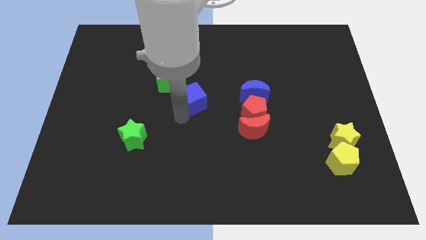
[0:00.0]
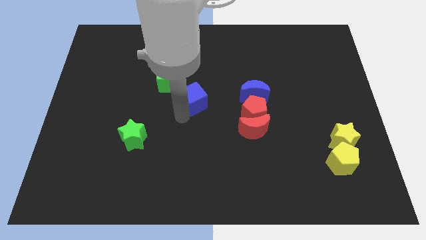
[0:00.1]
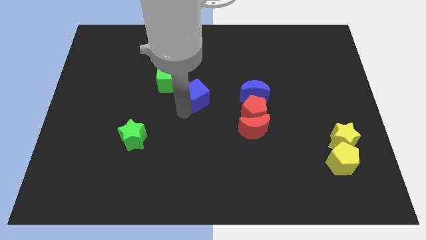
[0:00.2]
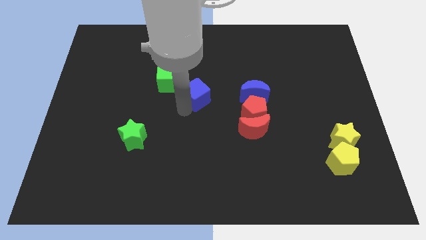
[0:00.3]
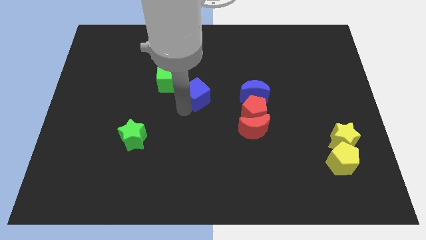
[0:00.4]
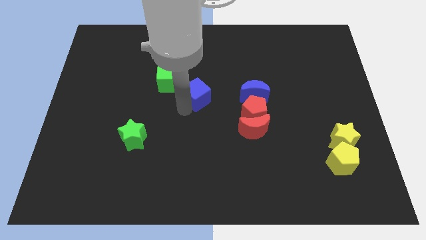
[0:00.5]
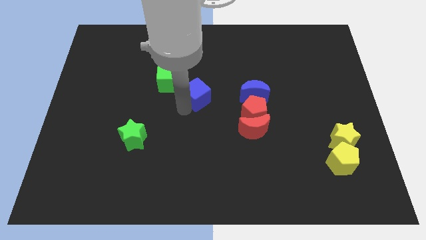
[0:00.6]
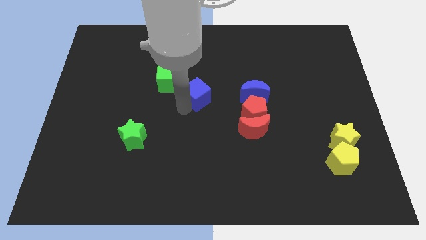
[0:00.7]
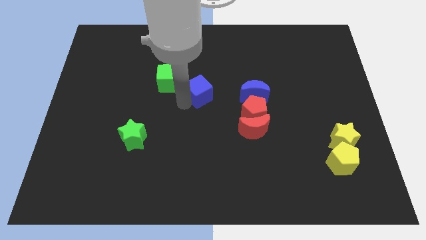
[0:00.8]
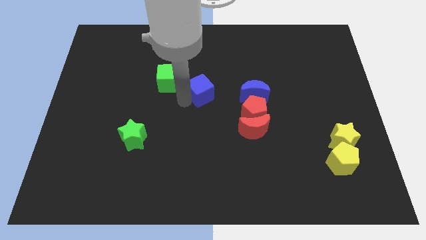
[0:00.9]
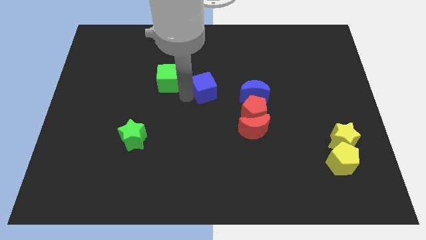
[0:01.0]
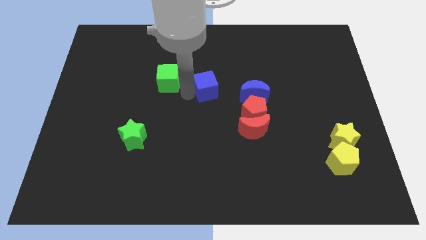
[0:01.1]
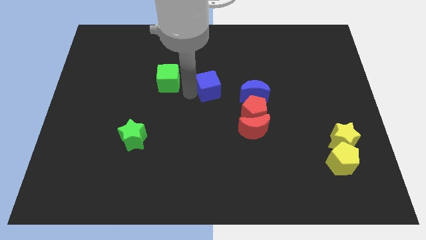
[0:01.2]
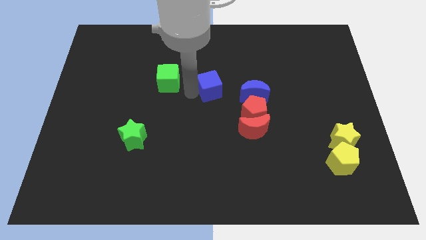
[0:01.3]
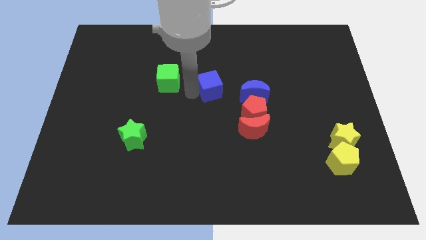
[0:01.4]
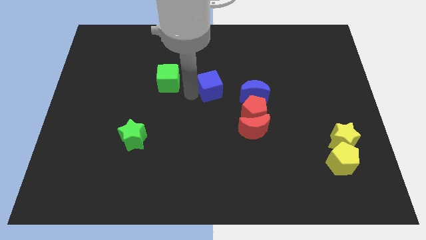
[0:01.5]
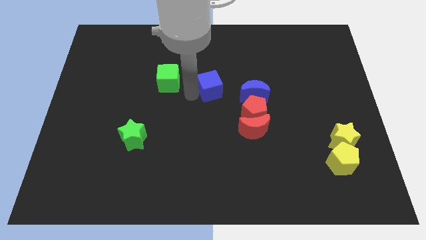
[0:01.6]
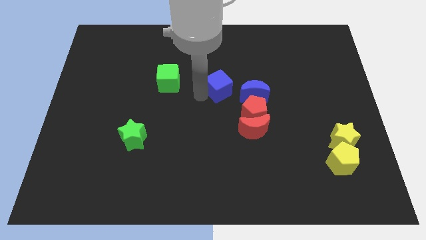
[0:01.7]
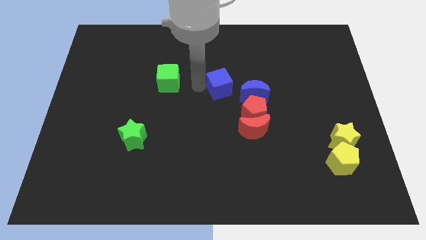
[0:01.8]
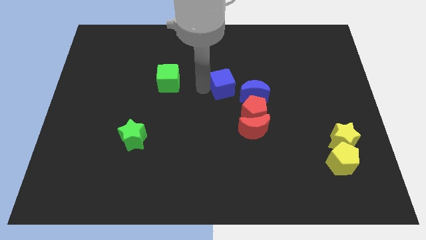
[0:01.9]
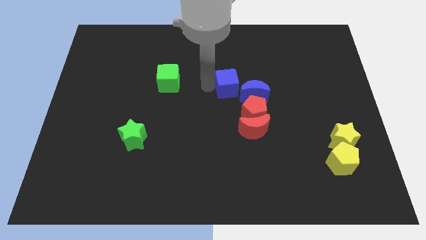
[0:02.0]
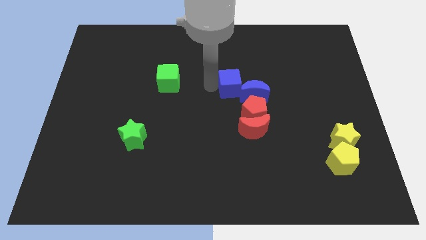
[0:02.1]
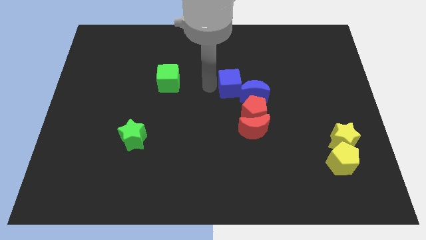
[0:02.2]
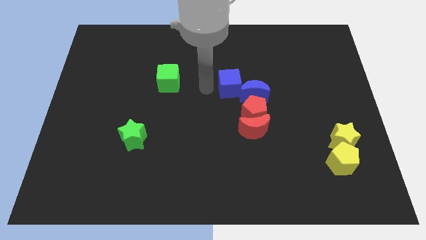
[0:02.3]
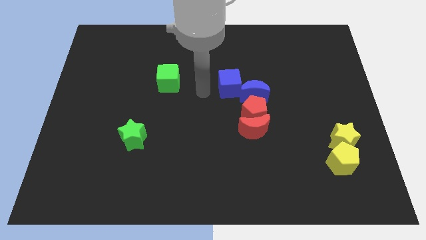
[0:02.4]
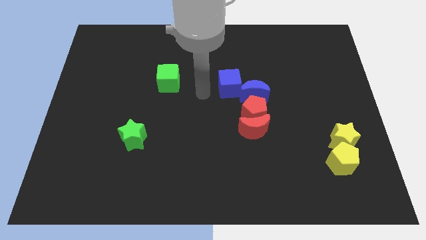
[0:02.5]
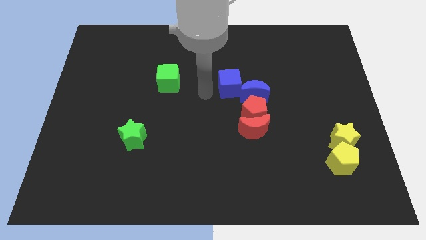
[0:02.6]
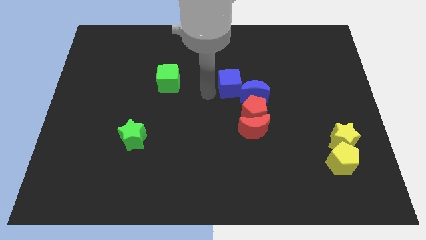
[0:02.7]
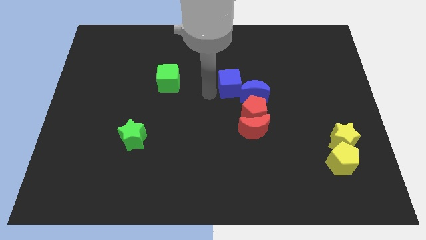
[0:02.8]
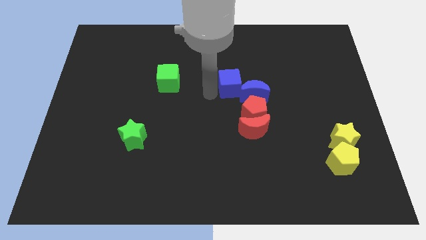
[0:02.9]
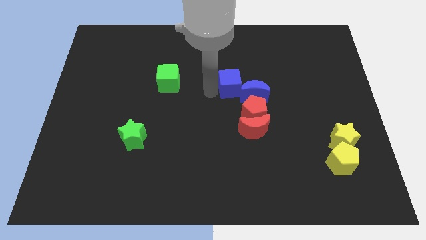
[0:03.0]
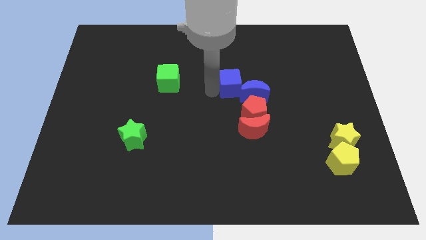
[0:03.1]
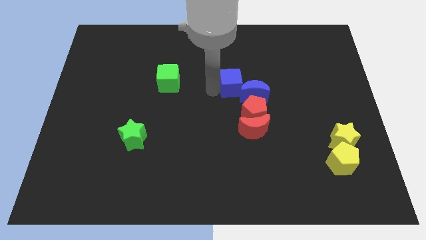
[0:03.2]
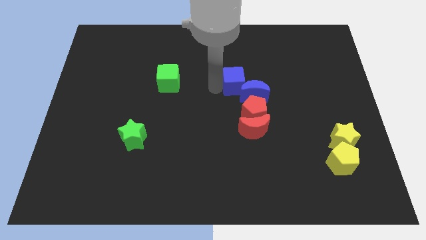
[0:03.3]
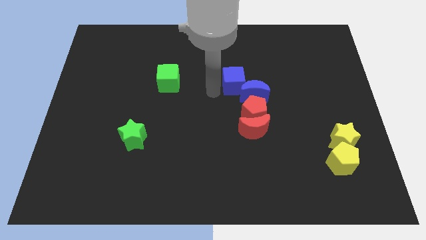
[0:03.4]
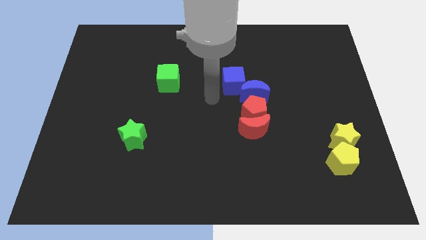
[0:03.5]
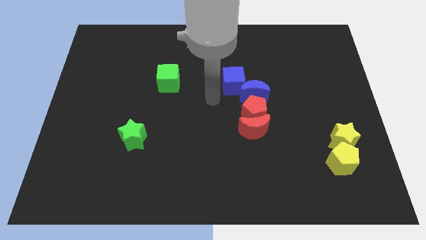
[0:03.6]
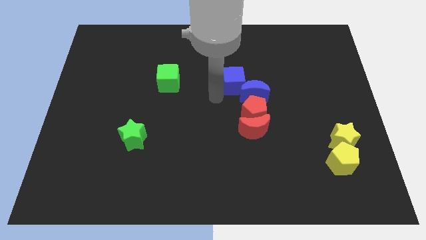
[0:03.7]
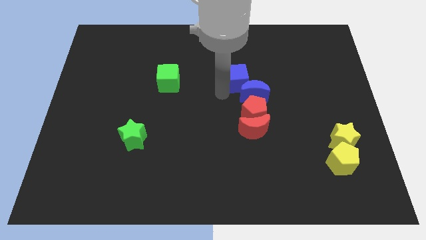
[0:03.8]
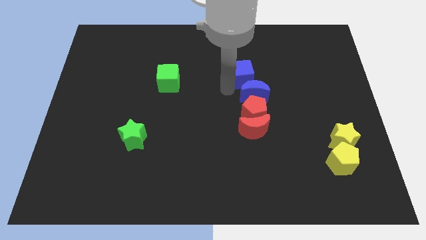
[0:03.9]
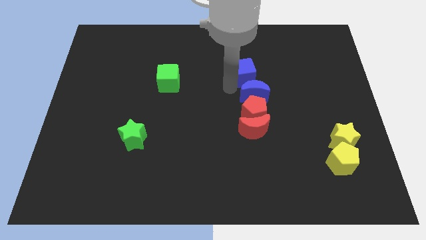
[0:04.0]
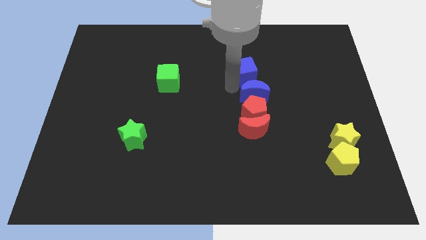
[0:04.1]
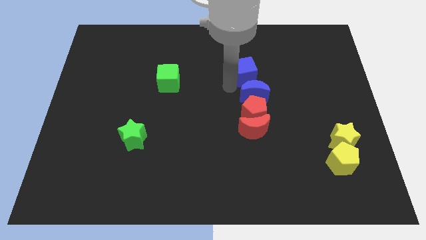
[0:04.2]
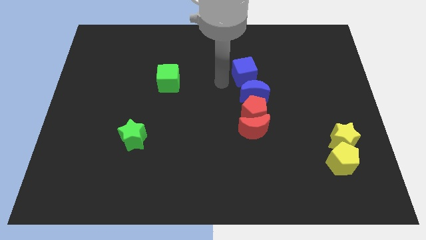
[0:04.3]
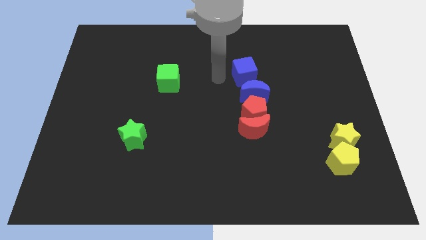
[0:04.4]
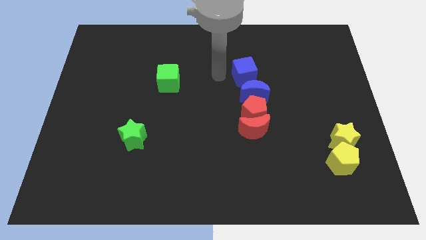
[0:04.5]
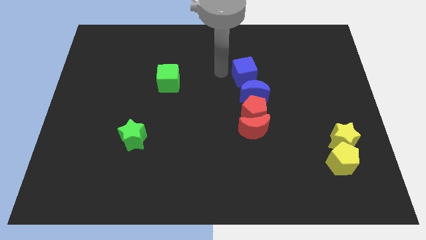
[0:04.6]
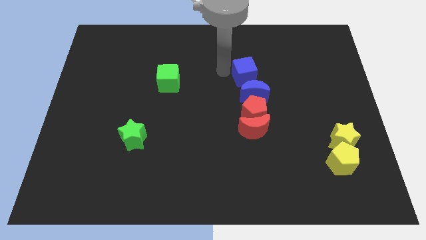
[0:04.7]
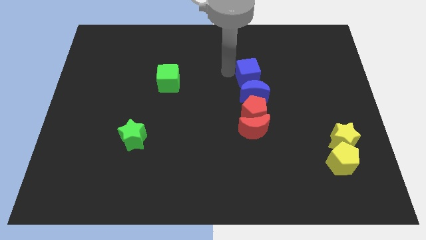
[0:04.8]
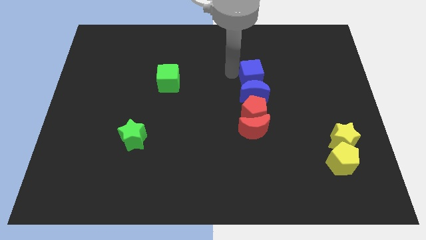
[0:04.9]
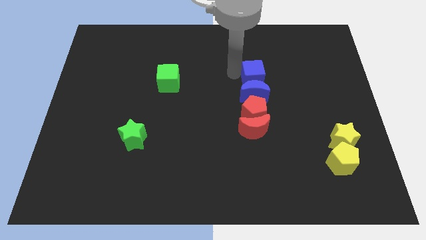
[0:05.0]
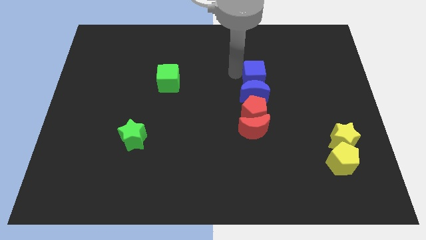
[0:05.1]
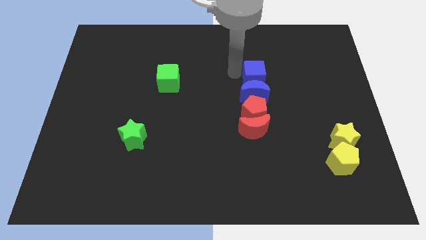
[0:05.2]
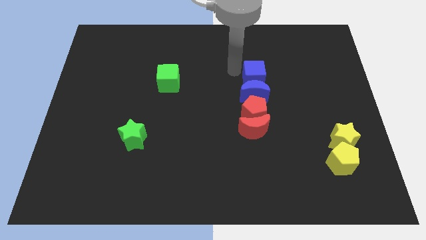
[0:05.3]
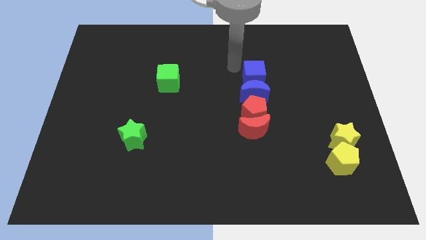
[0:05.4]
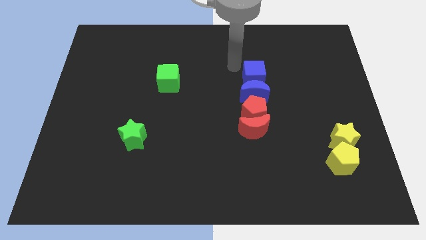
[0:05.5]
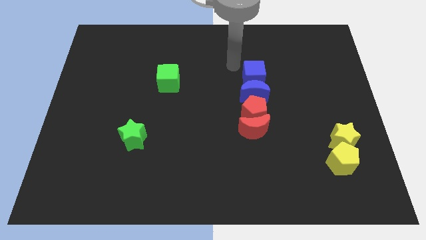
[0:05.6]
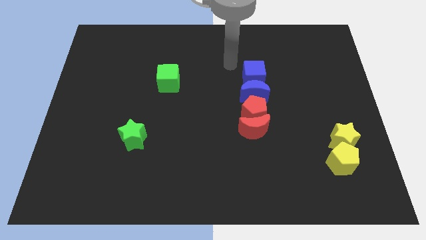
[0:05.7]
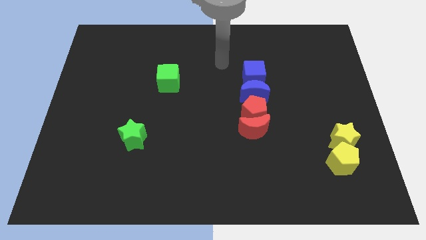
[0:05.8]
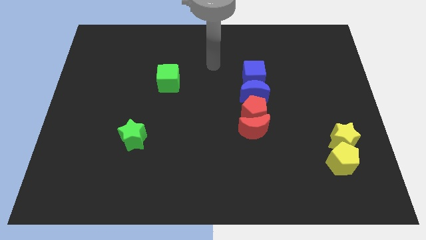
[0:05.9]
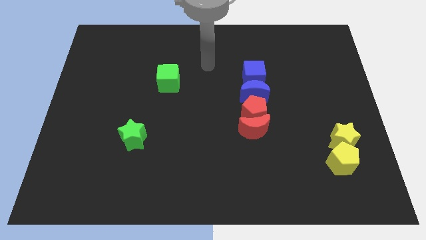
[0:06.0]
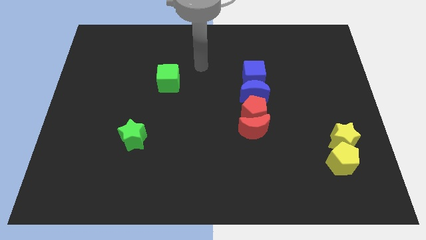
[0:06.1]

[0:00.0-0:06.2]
move the blue cube top left of the blue moon

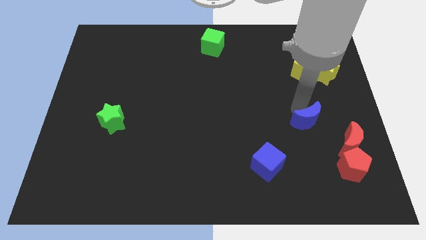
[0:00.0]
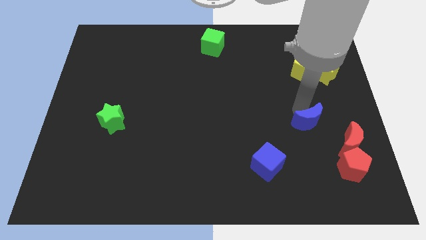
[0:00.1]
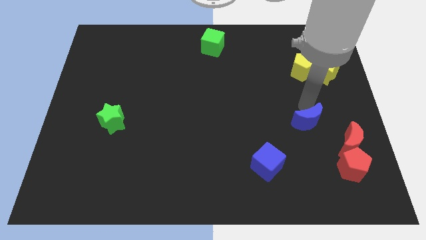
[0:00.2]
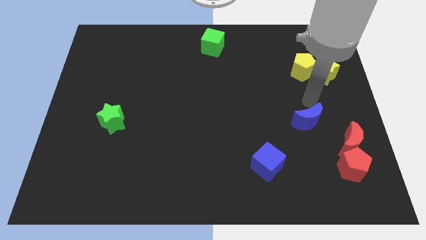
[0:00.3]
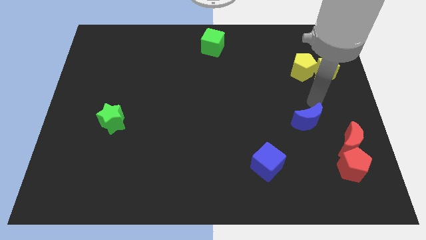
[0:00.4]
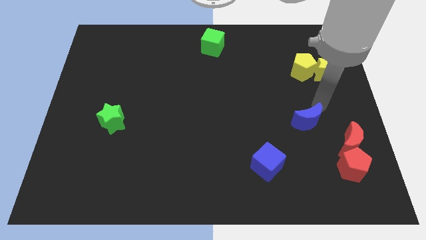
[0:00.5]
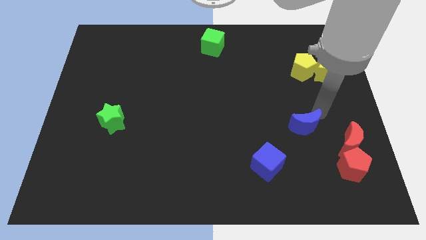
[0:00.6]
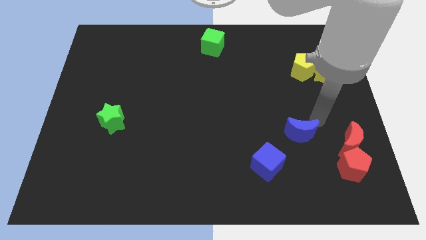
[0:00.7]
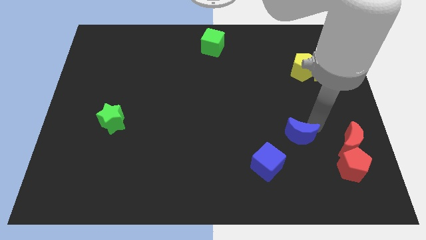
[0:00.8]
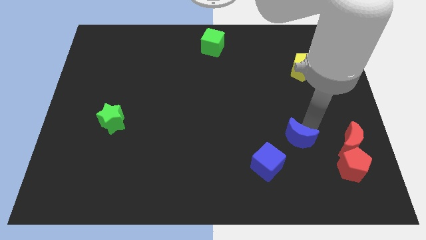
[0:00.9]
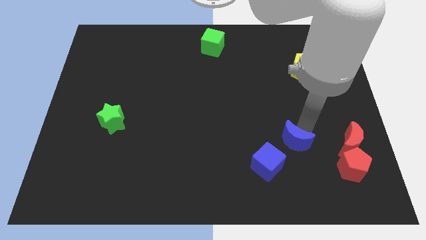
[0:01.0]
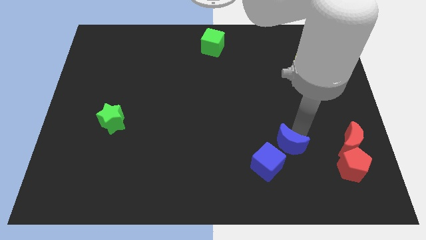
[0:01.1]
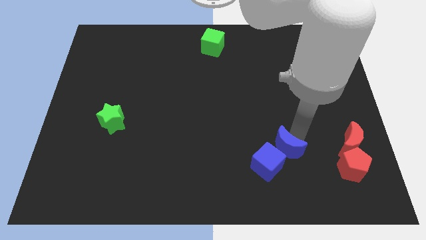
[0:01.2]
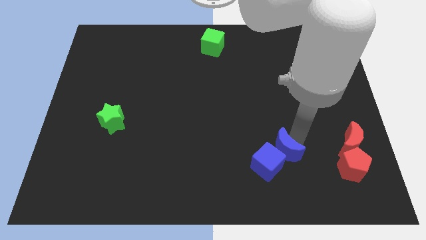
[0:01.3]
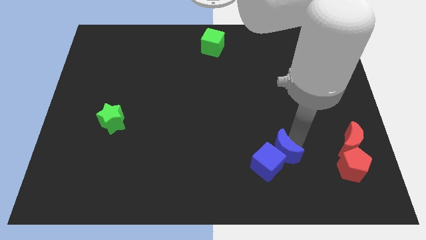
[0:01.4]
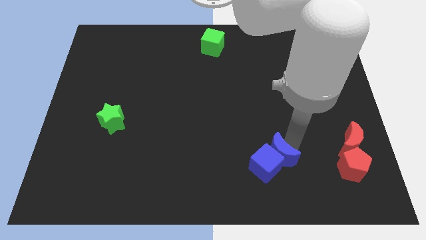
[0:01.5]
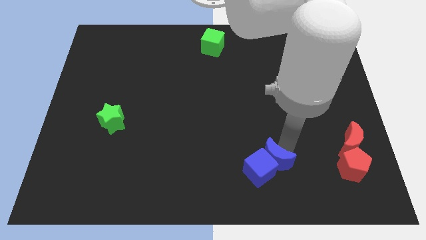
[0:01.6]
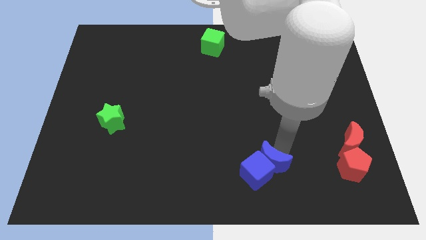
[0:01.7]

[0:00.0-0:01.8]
move the blue crescent into the blue cube towards the bottom of the board

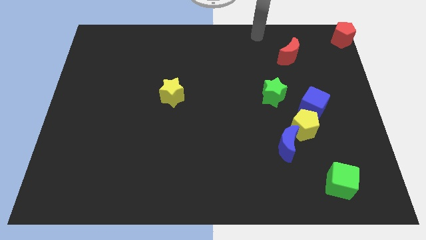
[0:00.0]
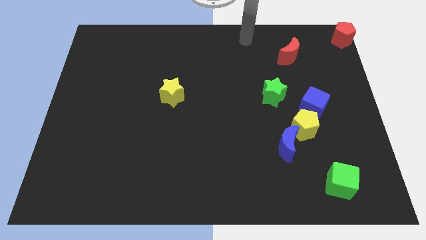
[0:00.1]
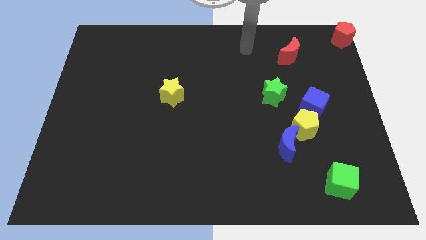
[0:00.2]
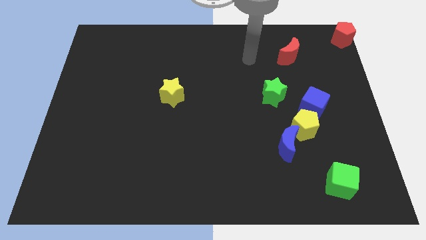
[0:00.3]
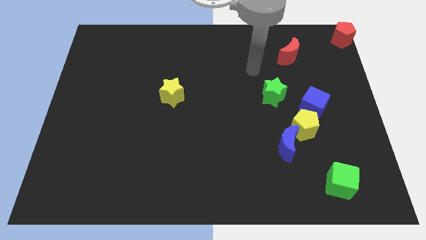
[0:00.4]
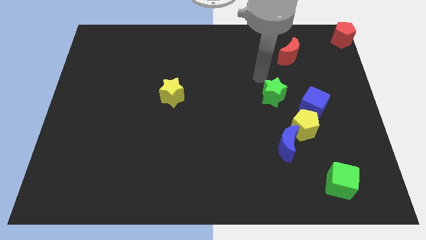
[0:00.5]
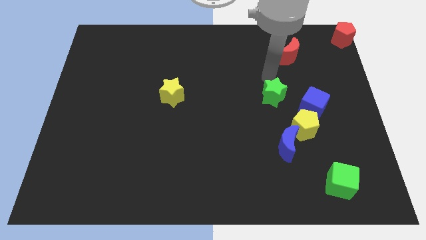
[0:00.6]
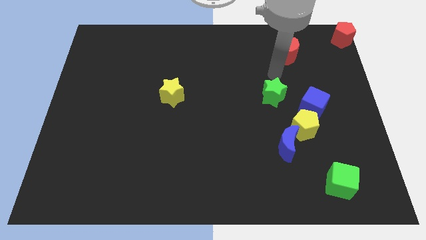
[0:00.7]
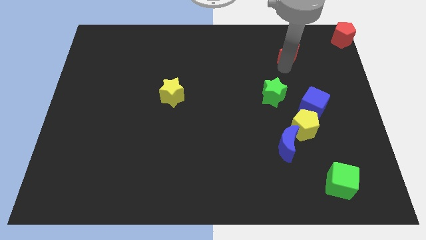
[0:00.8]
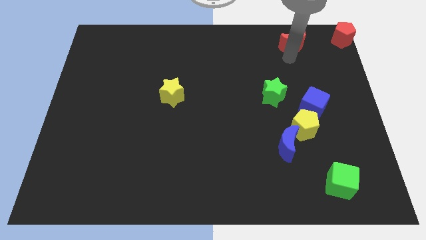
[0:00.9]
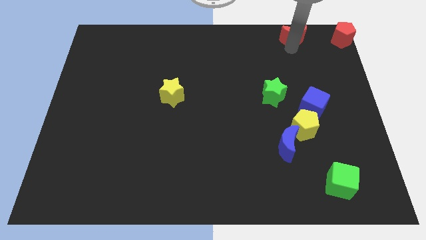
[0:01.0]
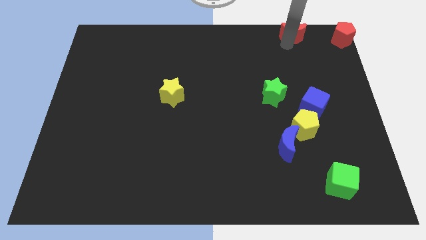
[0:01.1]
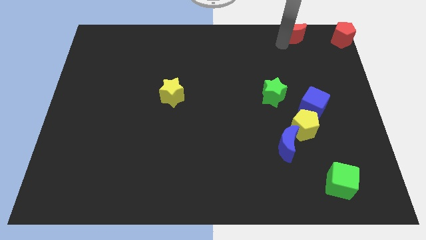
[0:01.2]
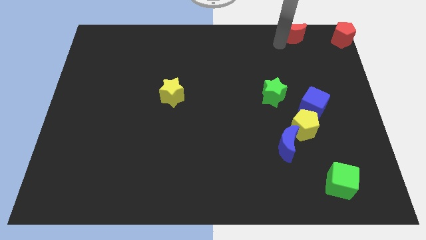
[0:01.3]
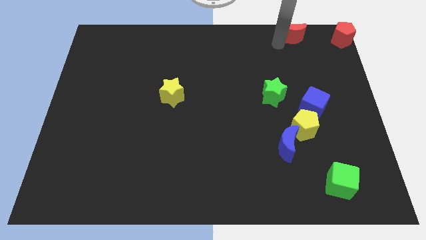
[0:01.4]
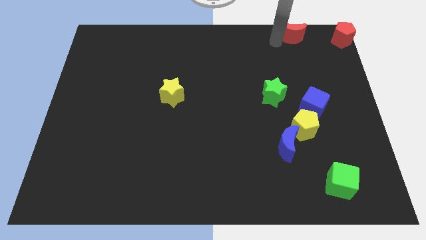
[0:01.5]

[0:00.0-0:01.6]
move the red crescent to the top right of the board
